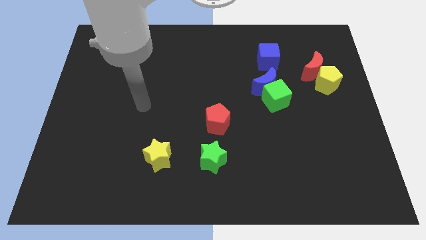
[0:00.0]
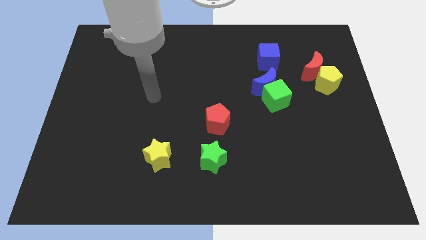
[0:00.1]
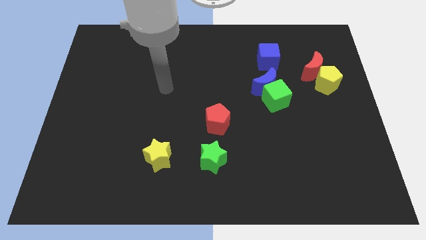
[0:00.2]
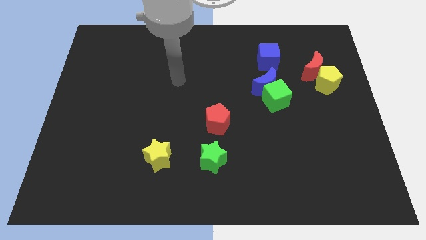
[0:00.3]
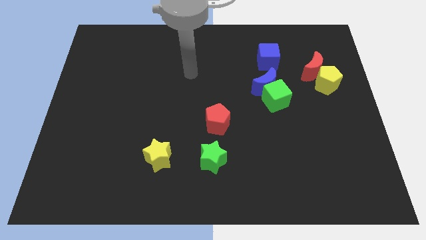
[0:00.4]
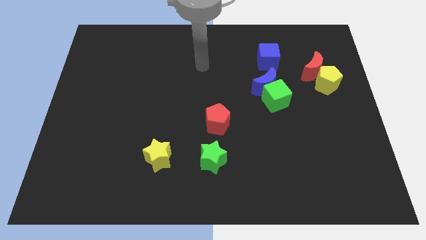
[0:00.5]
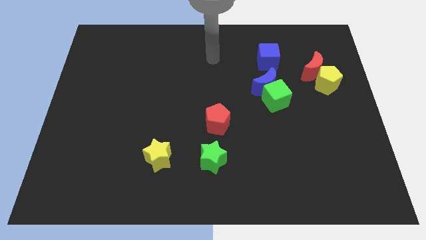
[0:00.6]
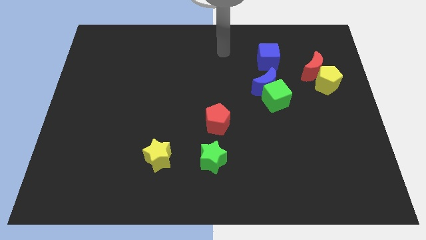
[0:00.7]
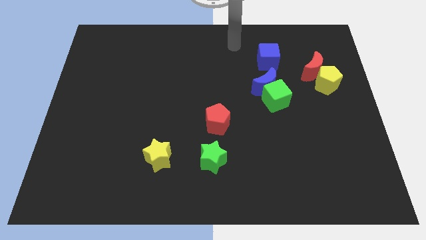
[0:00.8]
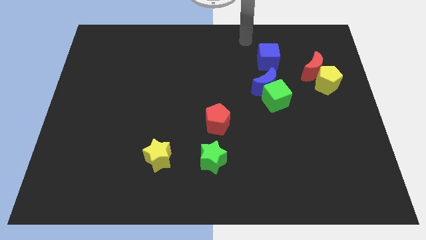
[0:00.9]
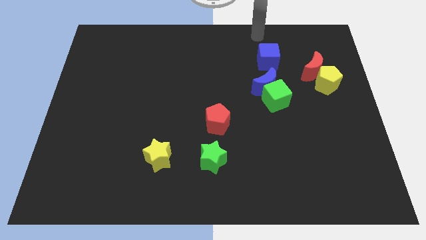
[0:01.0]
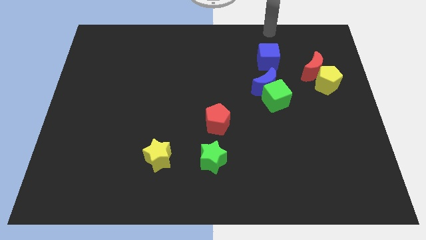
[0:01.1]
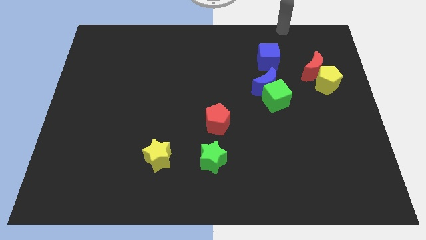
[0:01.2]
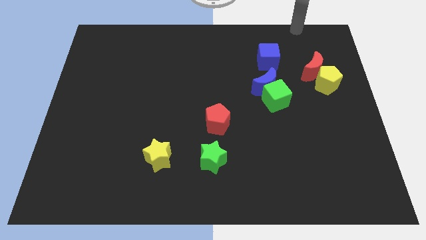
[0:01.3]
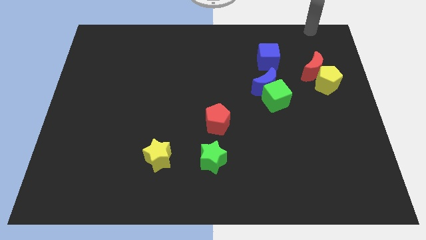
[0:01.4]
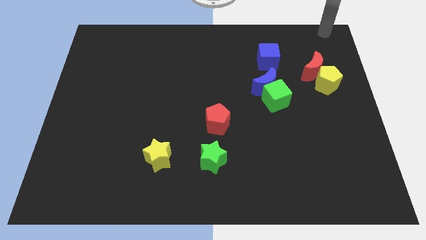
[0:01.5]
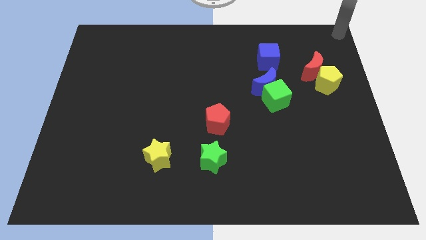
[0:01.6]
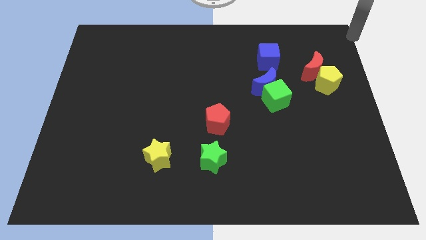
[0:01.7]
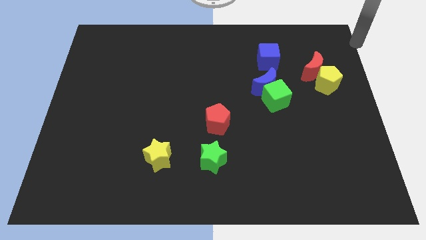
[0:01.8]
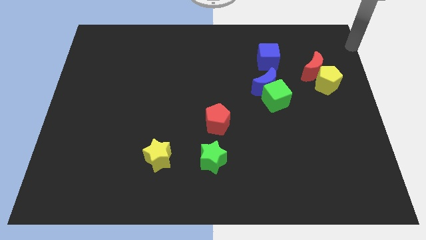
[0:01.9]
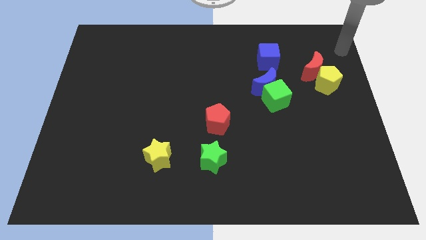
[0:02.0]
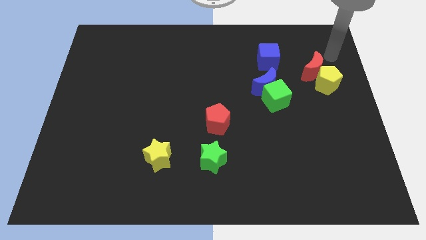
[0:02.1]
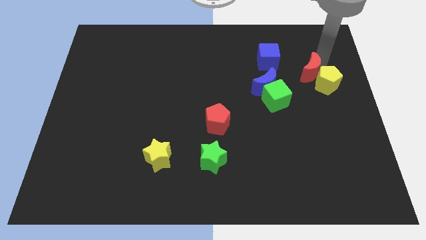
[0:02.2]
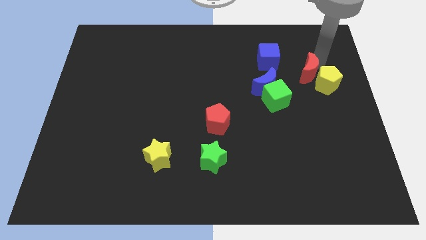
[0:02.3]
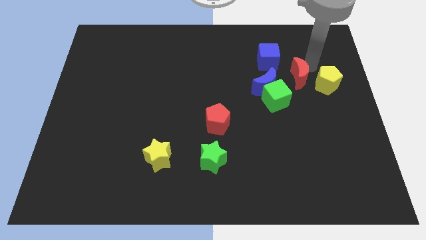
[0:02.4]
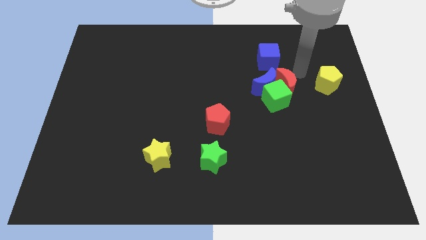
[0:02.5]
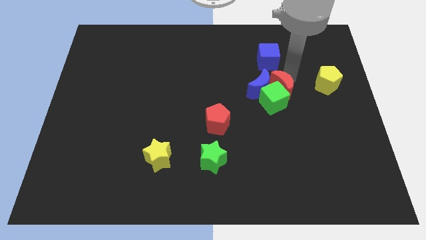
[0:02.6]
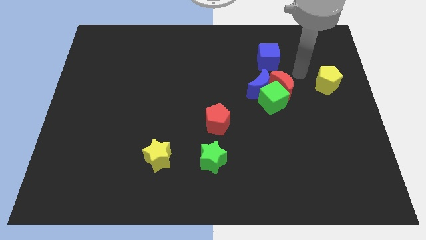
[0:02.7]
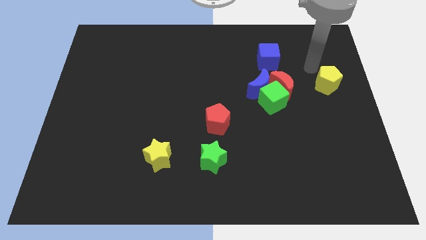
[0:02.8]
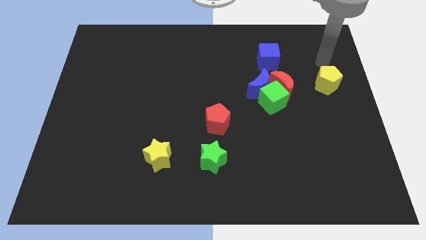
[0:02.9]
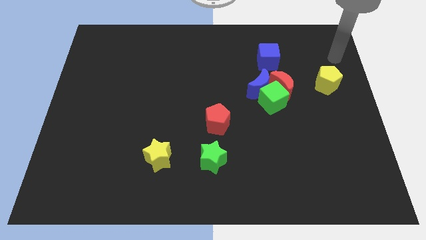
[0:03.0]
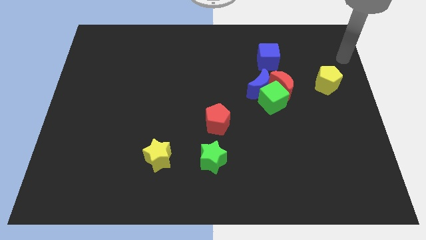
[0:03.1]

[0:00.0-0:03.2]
move red moon to the right of blue moon

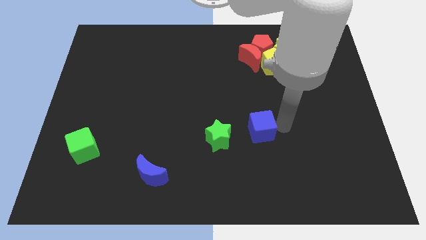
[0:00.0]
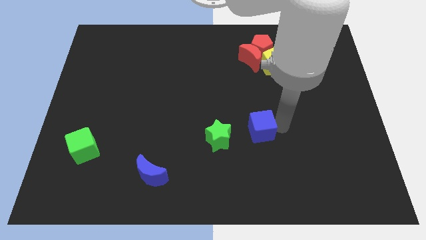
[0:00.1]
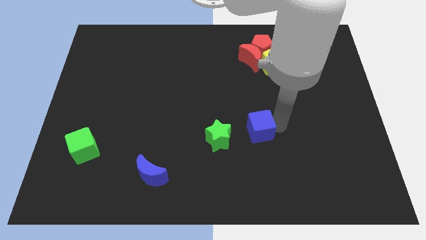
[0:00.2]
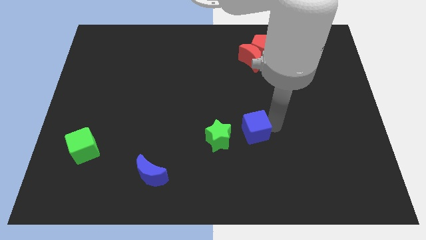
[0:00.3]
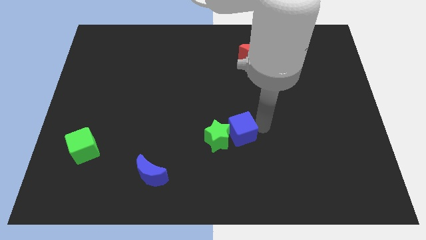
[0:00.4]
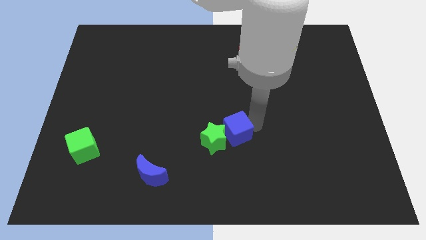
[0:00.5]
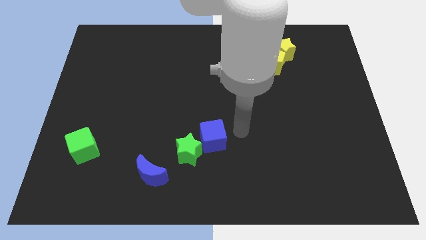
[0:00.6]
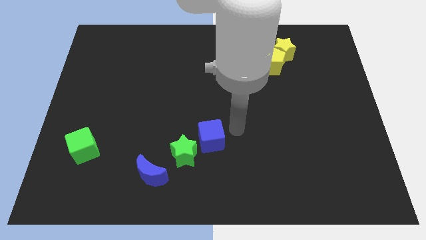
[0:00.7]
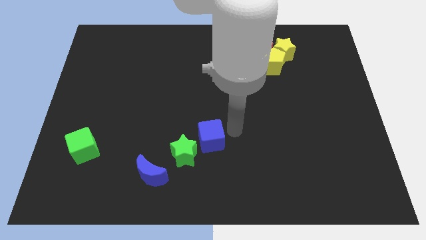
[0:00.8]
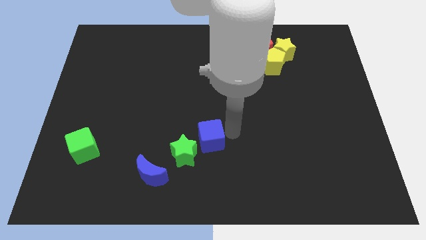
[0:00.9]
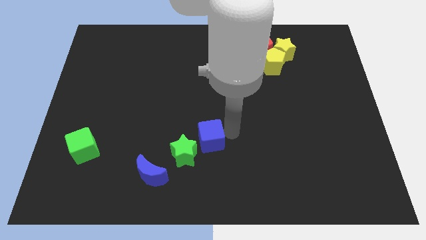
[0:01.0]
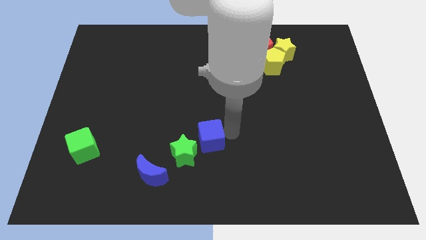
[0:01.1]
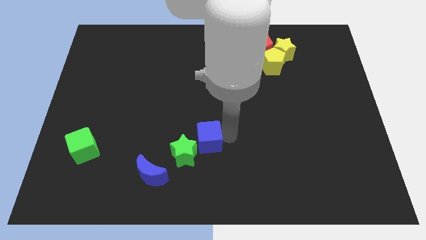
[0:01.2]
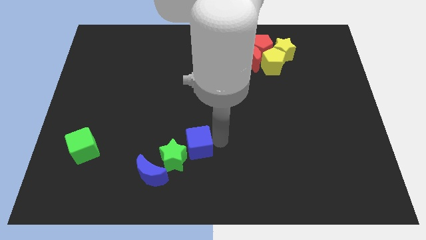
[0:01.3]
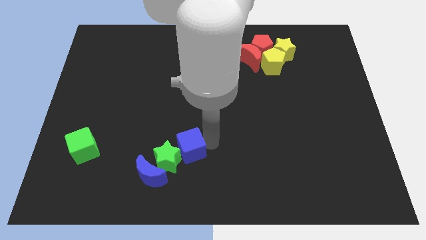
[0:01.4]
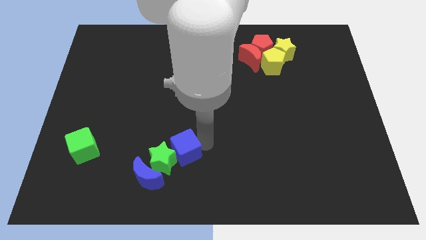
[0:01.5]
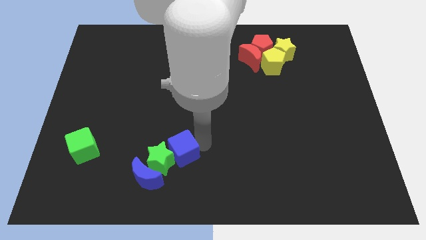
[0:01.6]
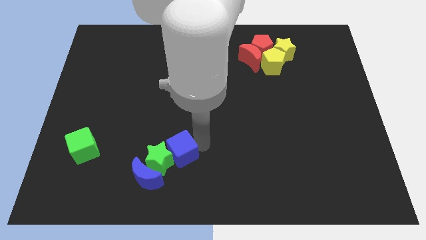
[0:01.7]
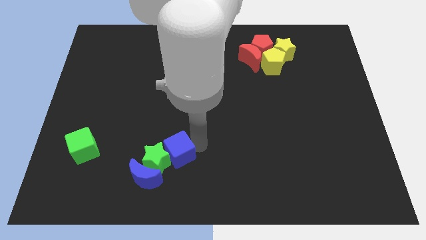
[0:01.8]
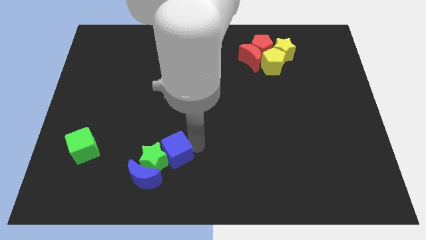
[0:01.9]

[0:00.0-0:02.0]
push the blue cube and green star into the blue crescent

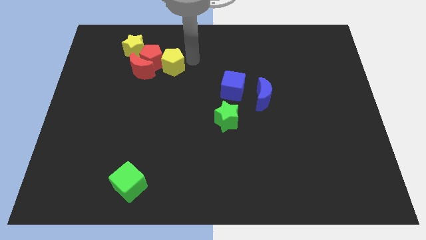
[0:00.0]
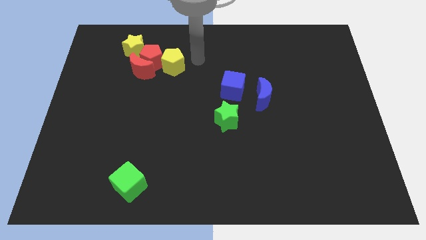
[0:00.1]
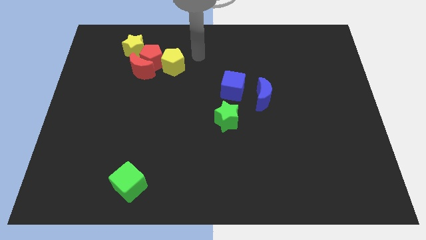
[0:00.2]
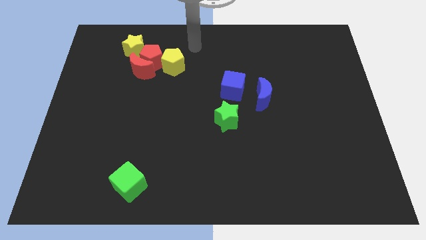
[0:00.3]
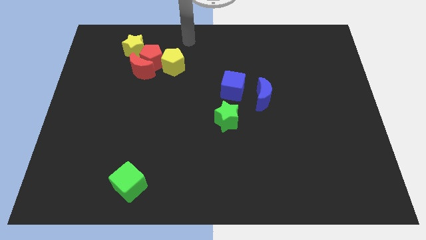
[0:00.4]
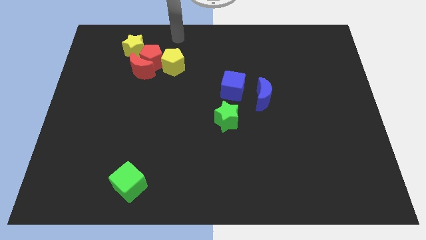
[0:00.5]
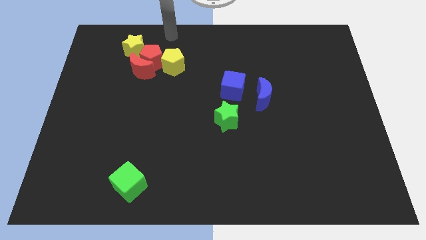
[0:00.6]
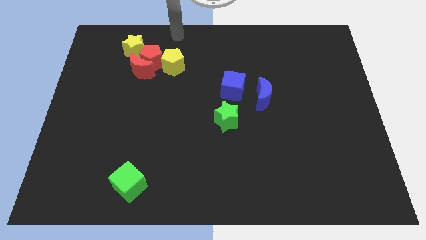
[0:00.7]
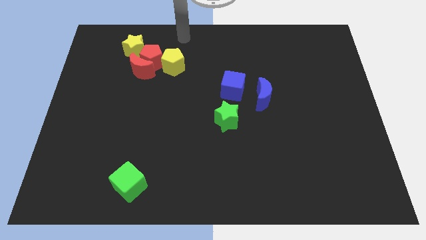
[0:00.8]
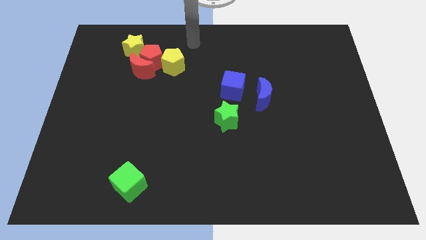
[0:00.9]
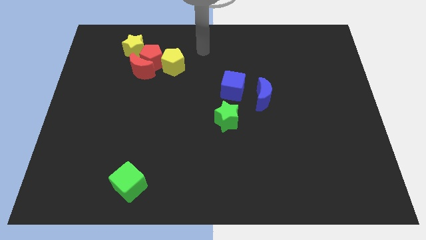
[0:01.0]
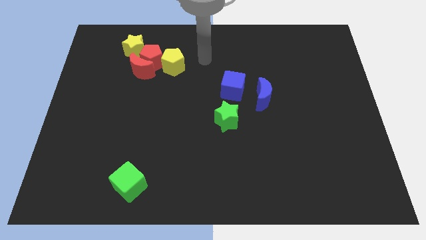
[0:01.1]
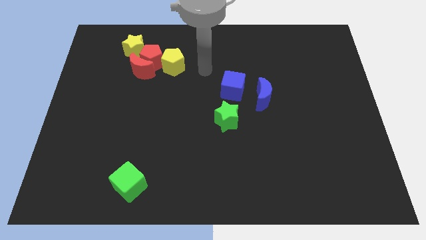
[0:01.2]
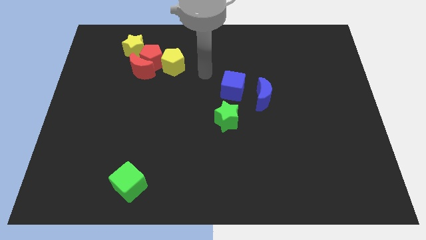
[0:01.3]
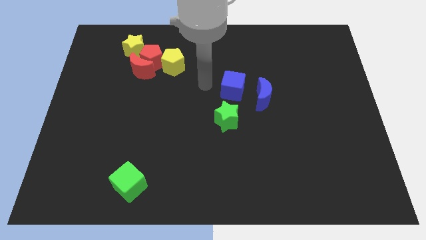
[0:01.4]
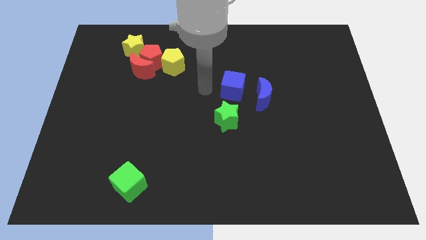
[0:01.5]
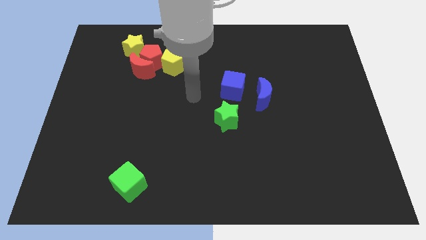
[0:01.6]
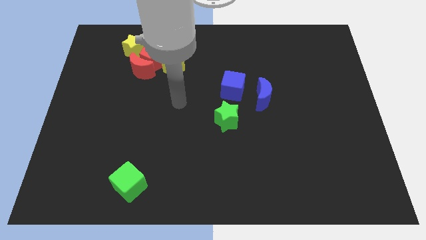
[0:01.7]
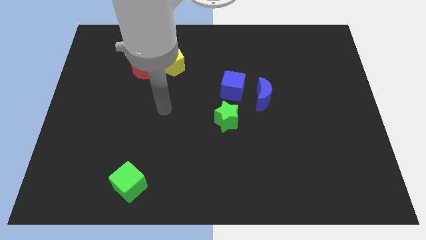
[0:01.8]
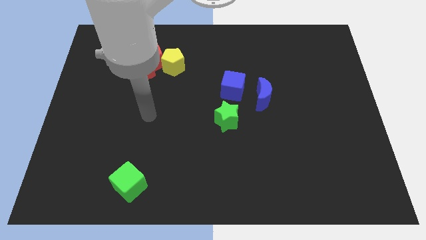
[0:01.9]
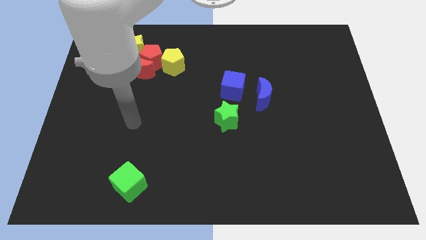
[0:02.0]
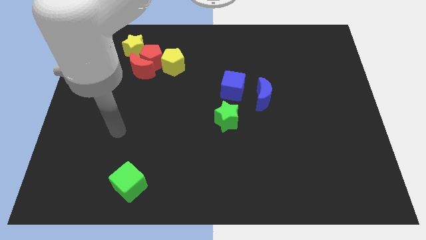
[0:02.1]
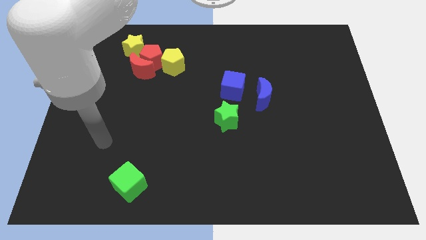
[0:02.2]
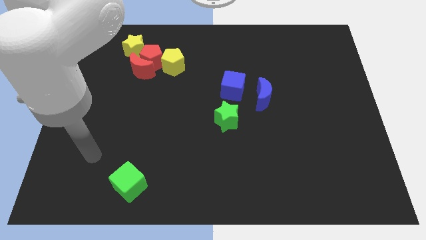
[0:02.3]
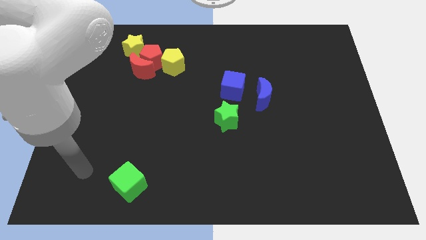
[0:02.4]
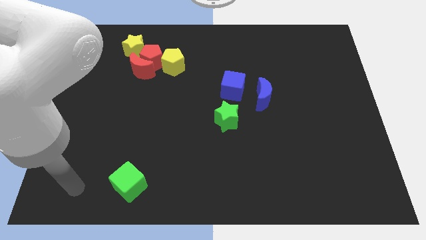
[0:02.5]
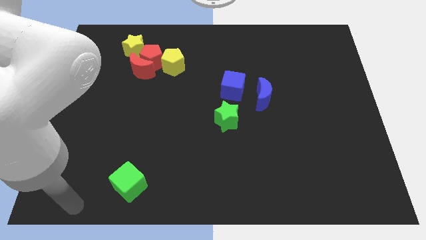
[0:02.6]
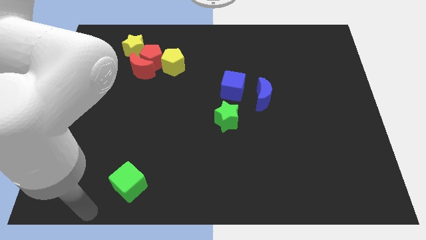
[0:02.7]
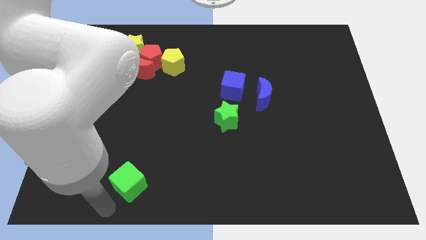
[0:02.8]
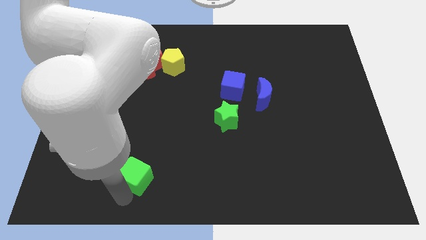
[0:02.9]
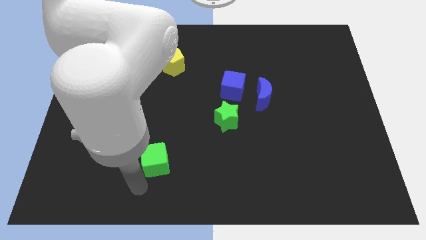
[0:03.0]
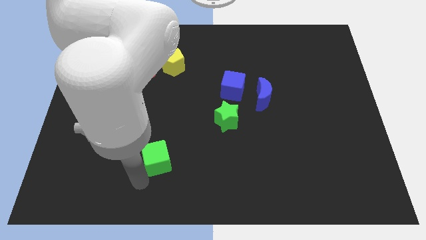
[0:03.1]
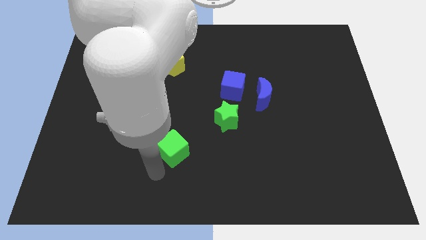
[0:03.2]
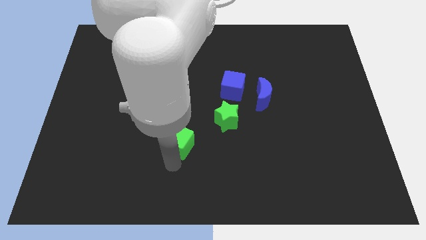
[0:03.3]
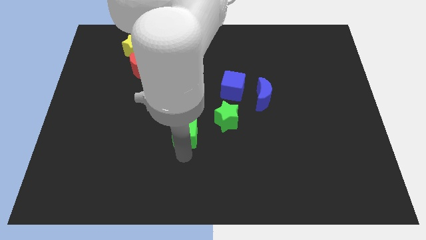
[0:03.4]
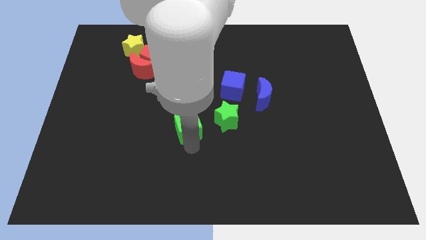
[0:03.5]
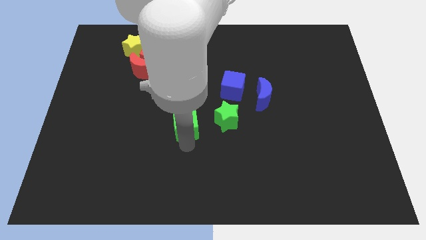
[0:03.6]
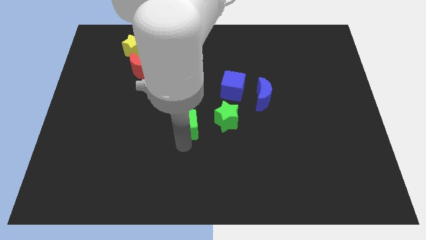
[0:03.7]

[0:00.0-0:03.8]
push the green cube to the left side of the green star
